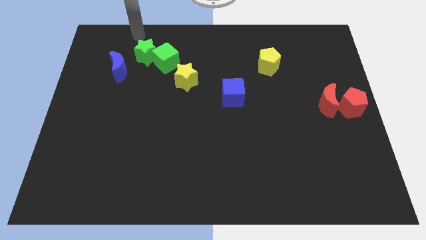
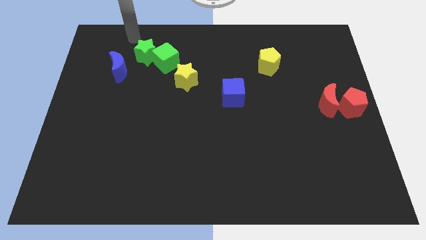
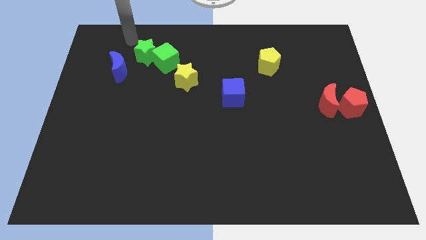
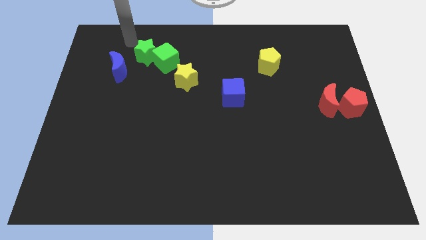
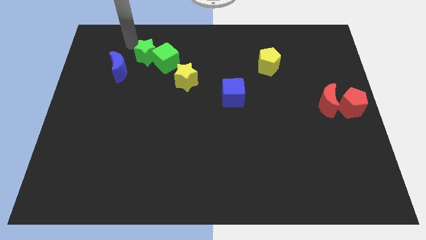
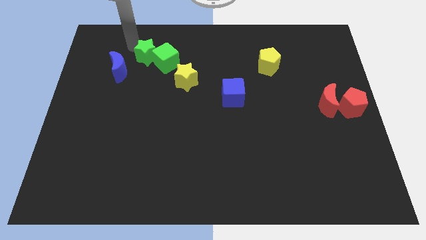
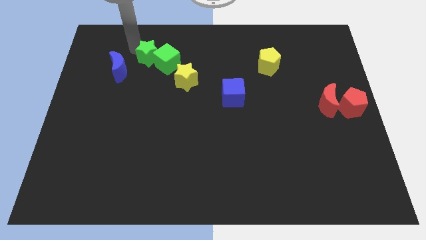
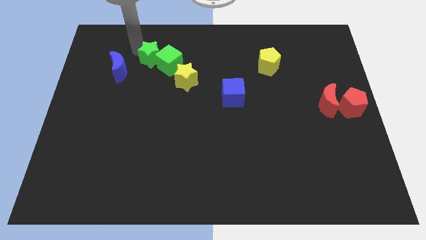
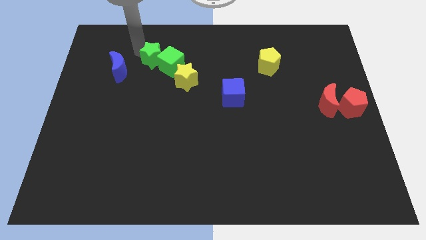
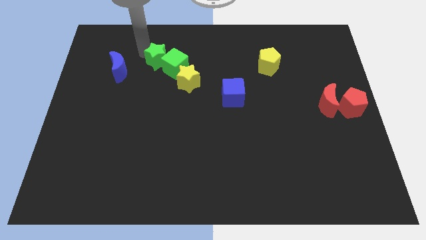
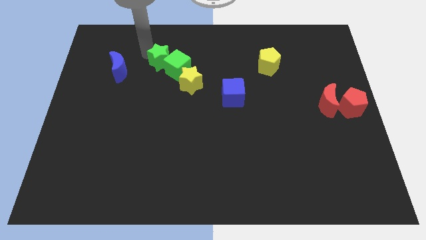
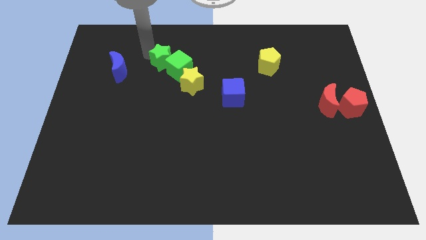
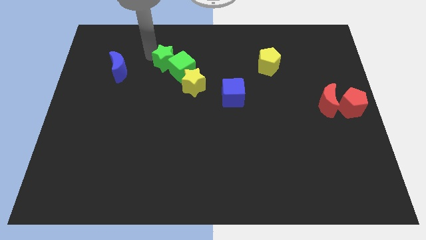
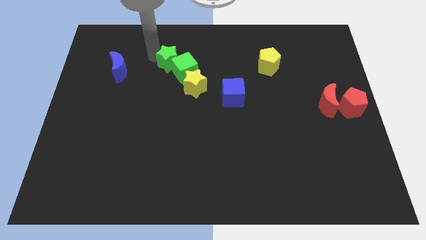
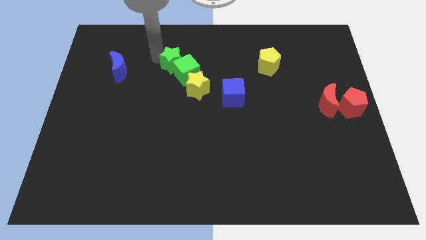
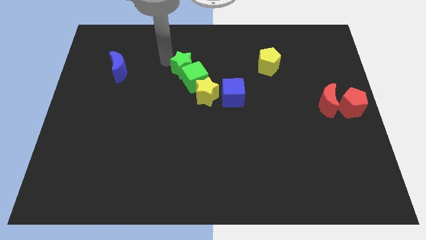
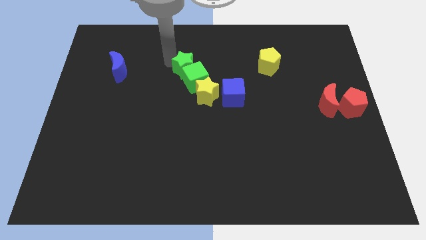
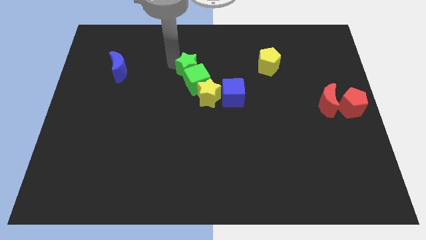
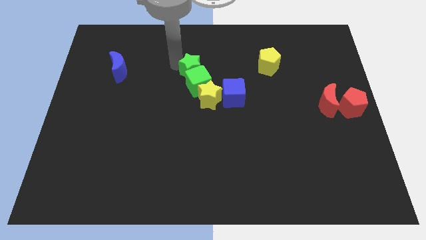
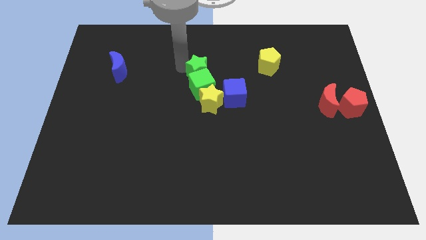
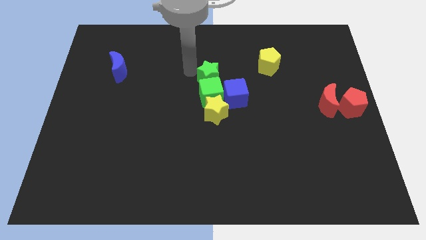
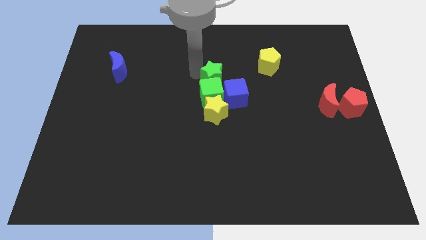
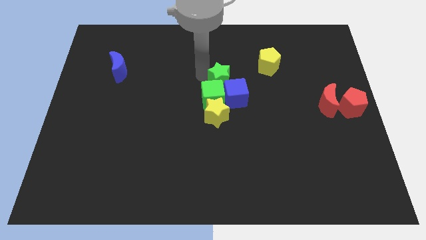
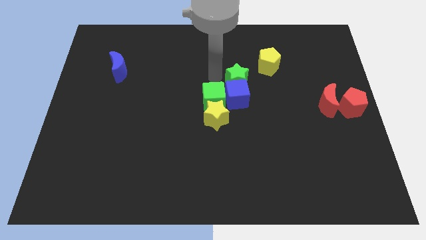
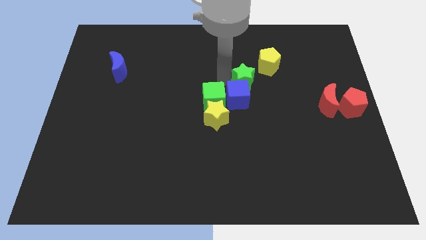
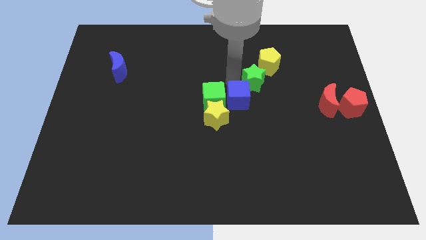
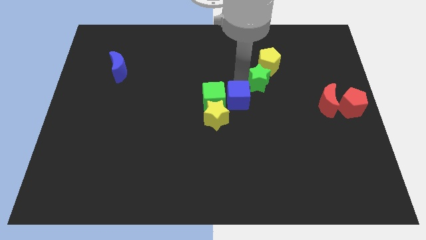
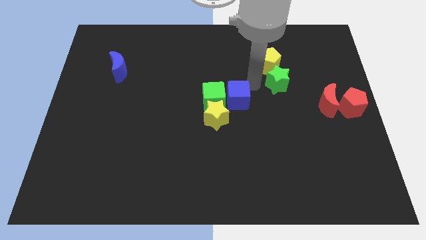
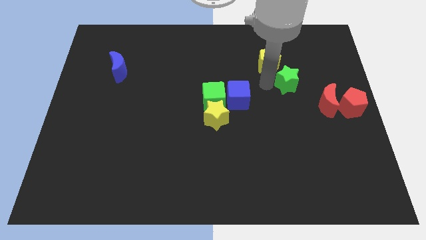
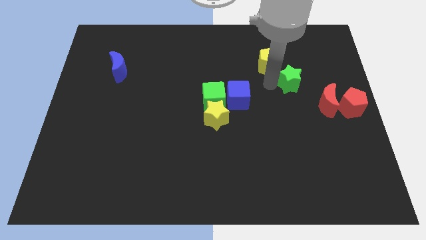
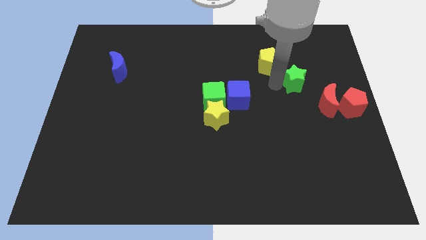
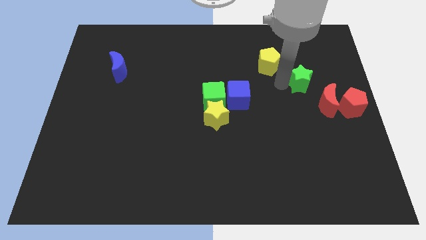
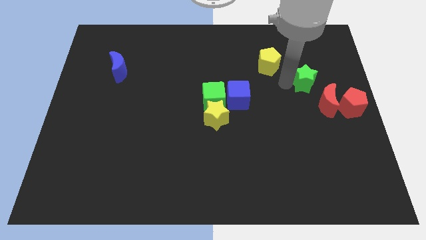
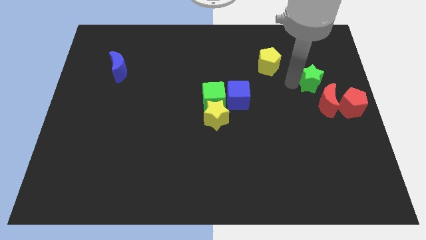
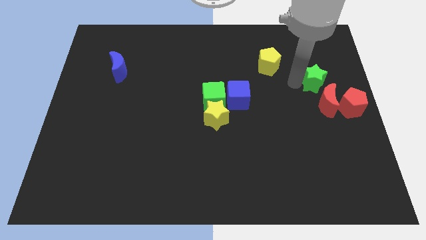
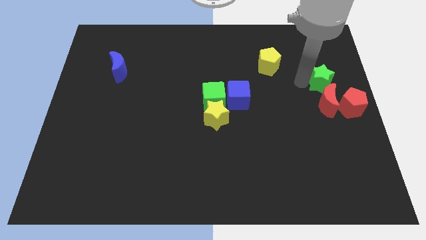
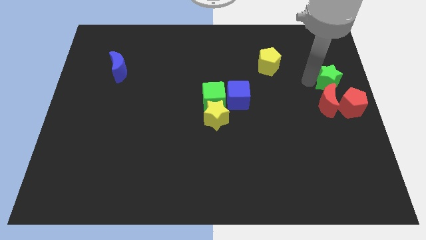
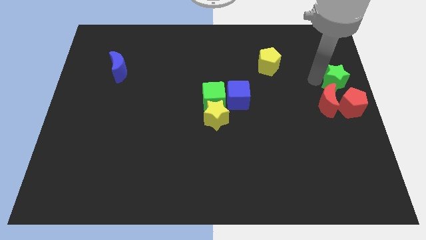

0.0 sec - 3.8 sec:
place the green star above the red moon

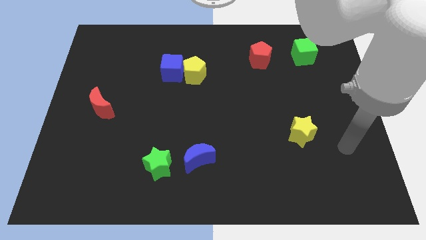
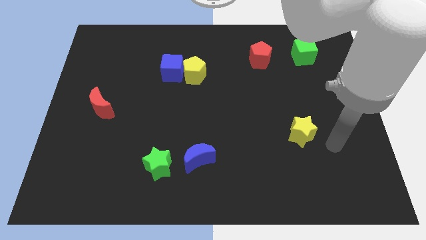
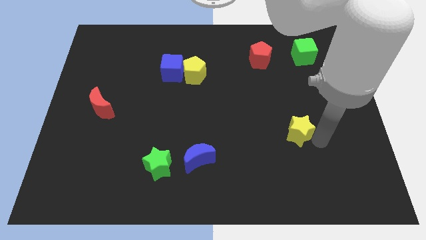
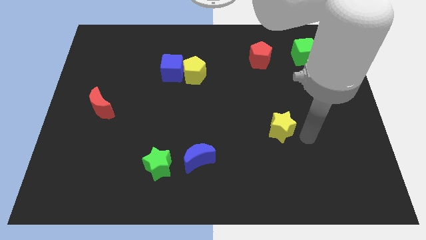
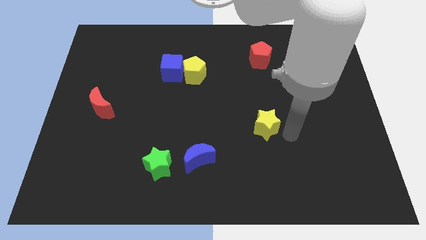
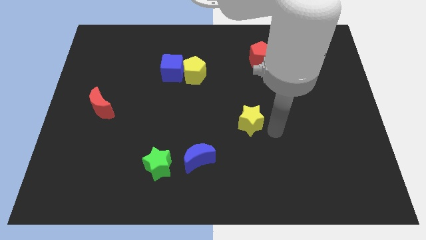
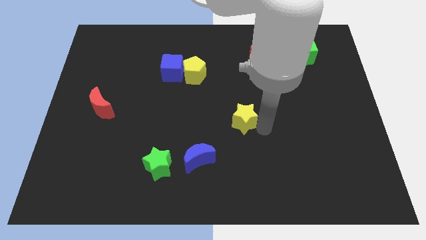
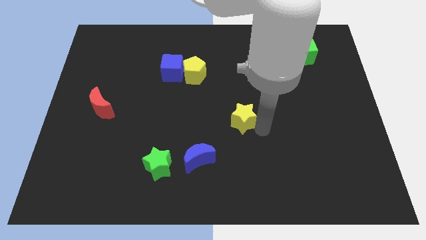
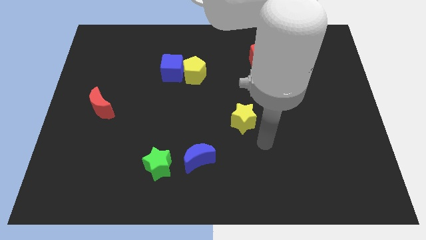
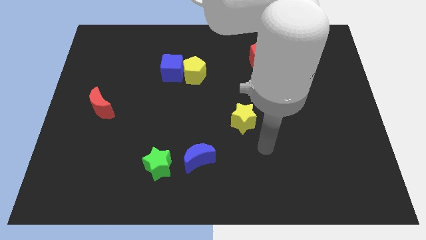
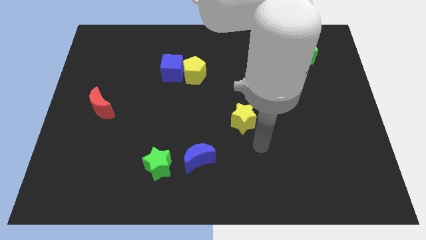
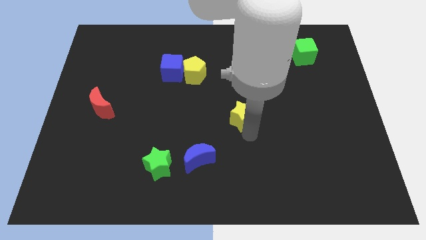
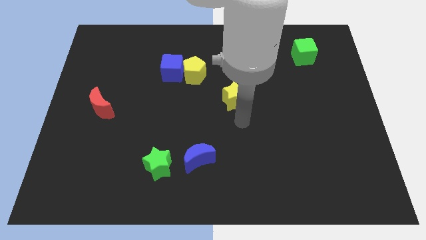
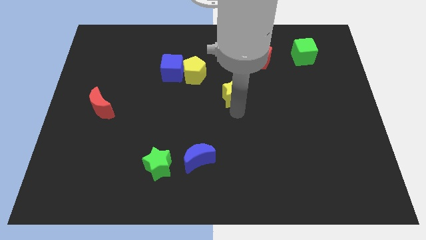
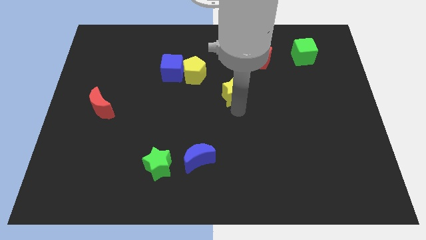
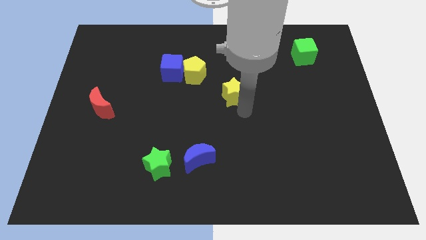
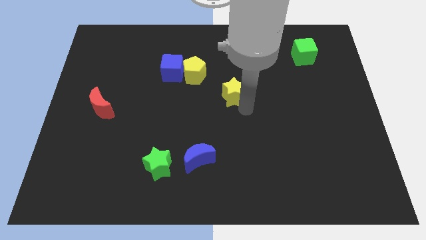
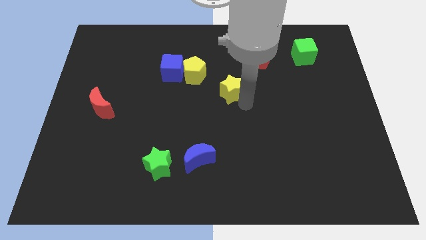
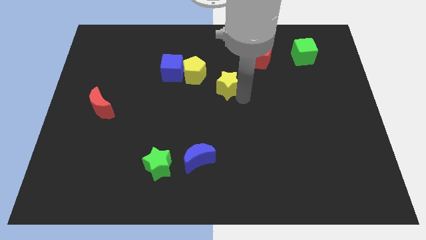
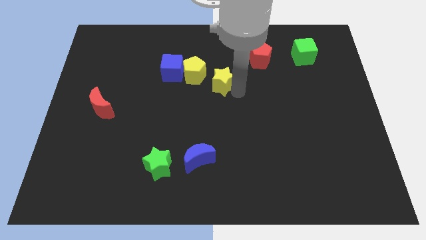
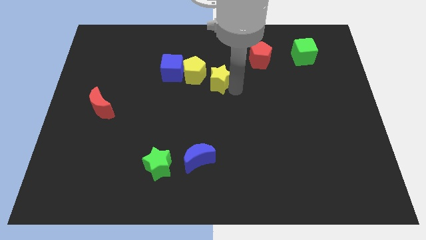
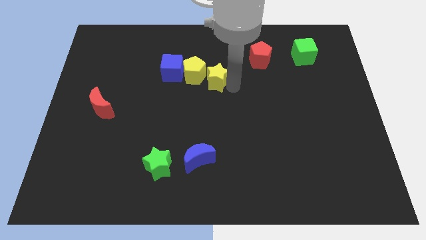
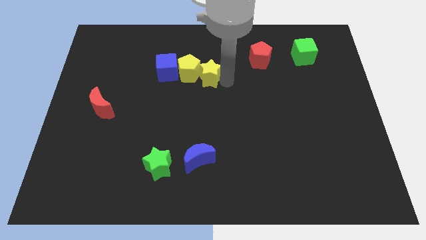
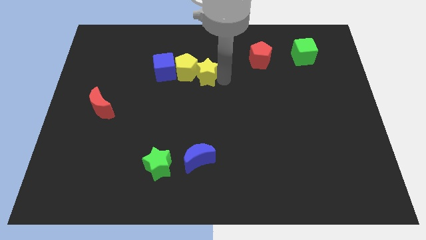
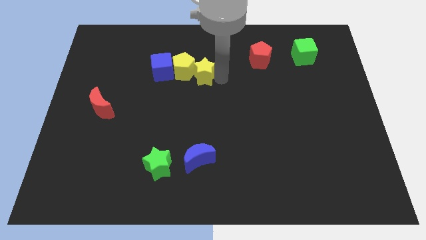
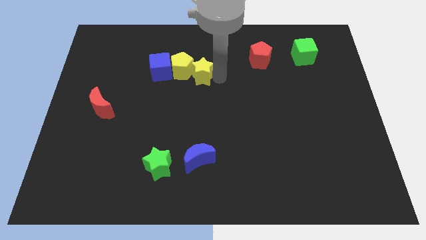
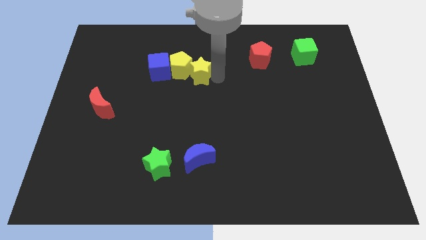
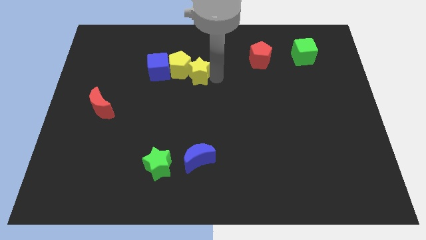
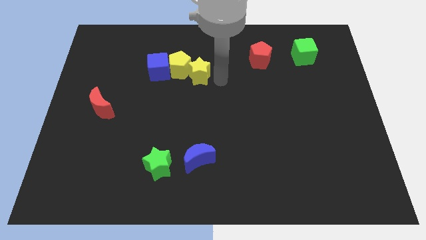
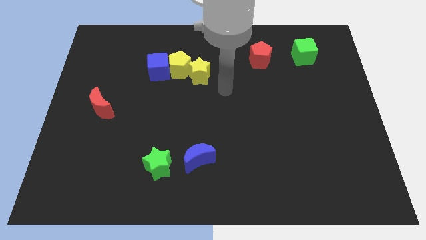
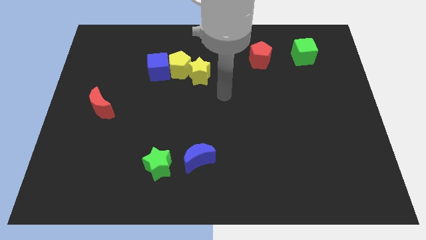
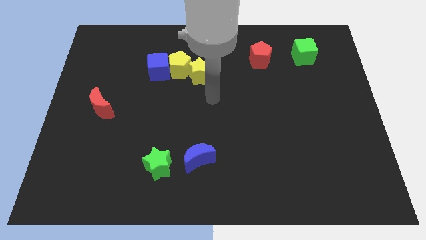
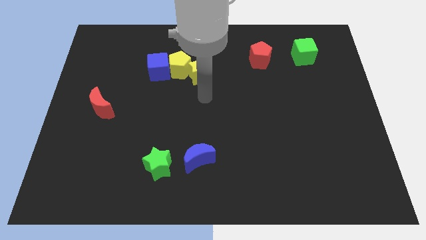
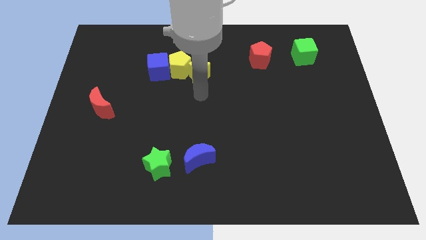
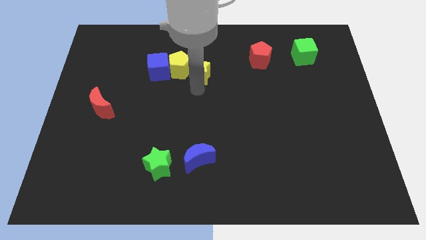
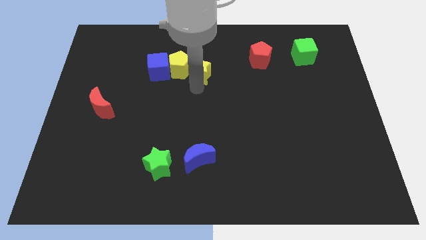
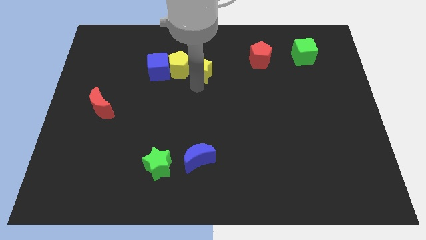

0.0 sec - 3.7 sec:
push the yellow star into the yellow pentagon

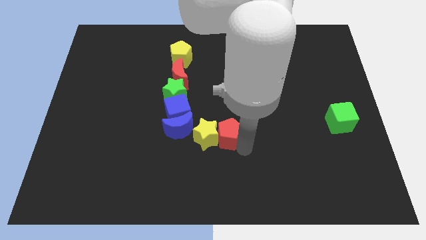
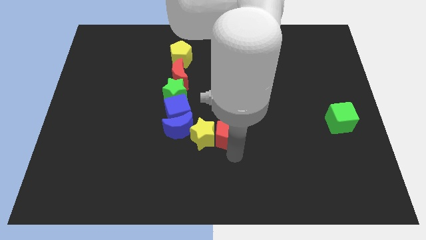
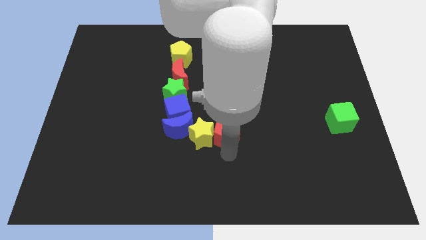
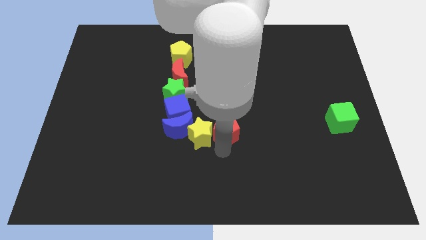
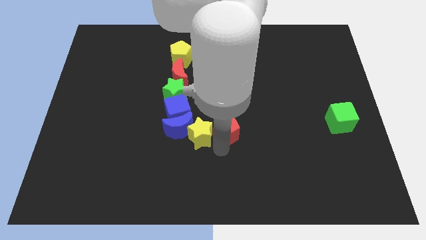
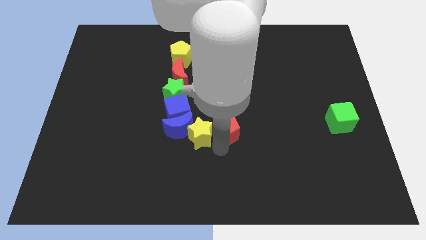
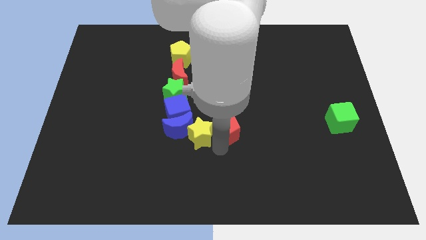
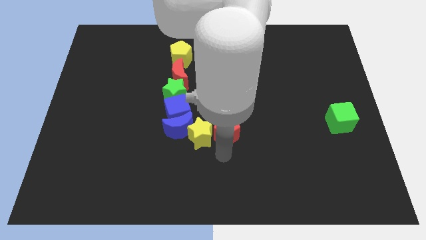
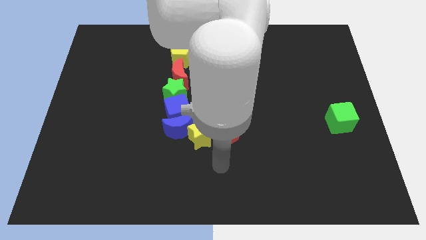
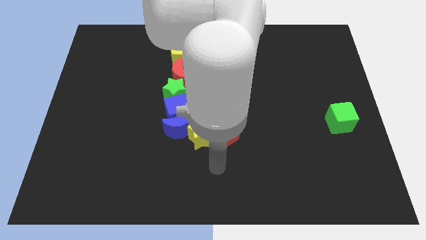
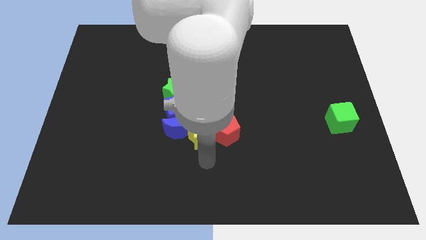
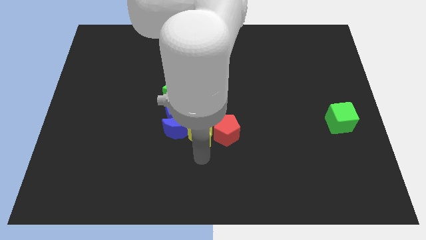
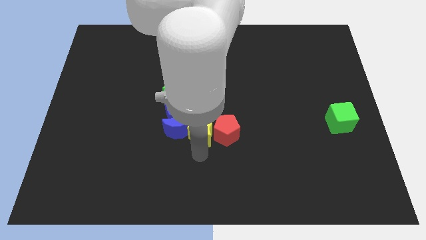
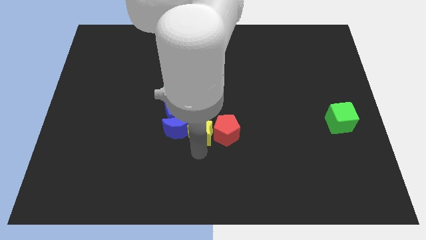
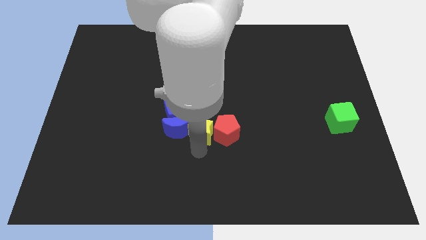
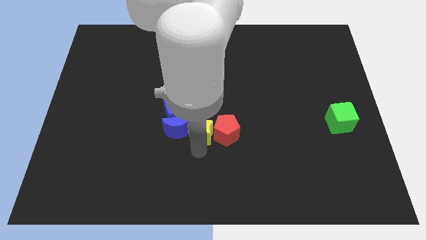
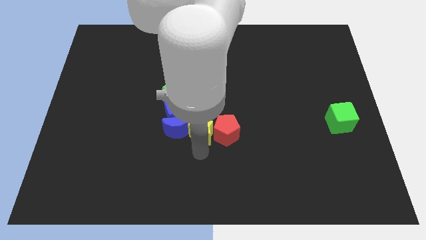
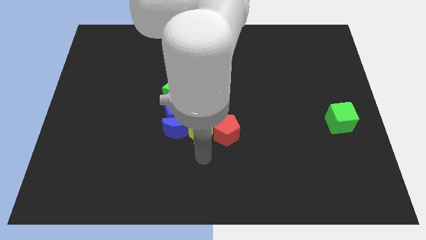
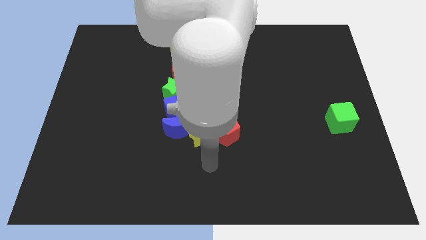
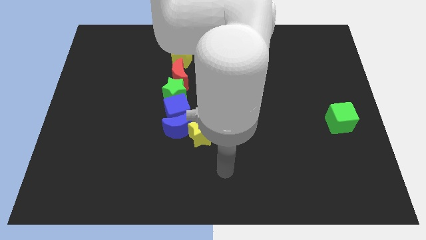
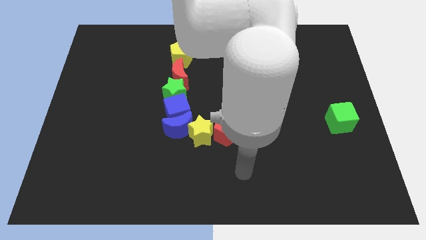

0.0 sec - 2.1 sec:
adjust the yellow star which is to the right of the blue moon
